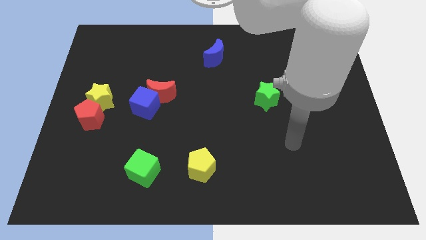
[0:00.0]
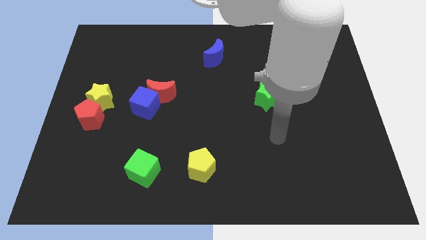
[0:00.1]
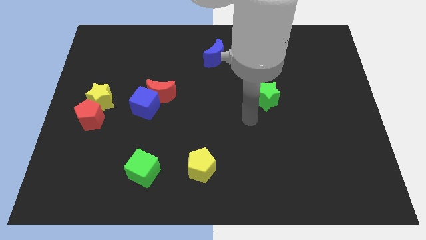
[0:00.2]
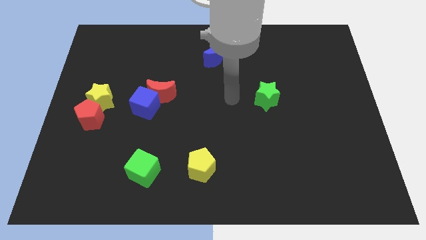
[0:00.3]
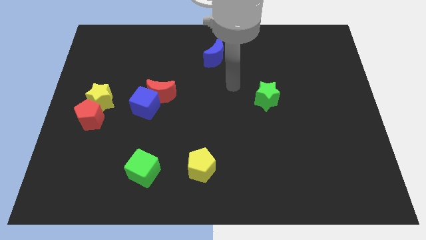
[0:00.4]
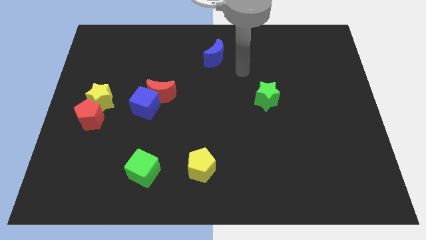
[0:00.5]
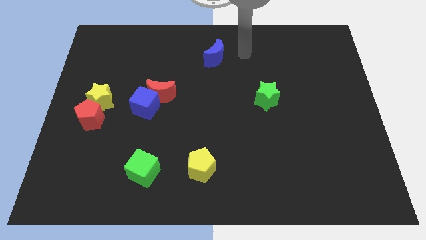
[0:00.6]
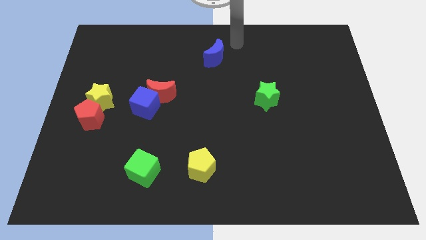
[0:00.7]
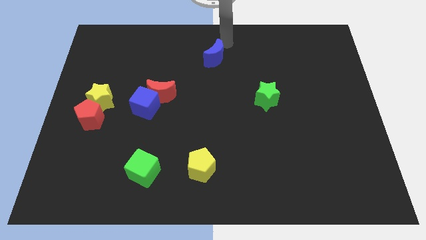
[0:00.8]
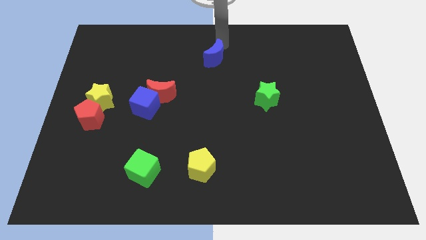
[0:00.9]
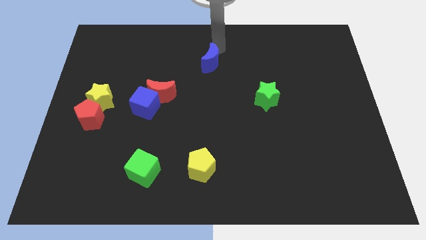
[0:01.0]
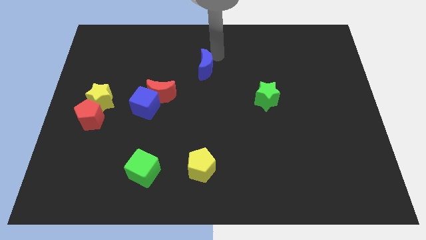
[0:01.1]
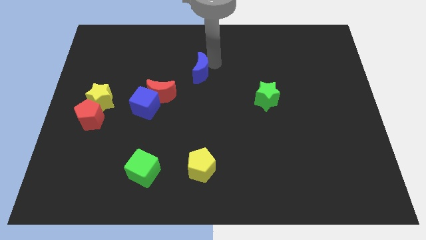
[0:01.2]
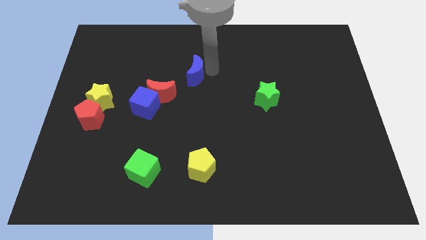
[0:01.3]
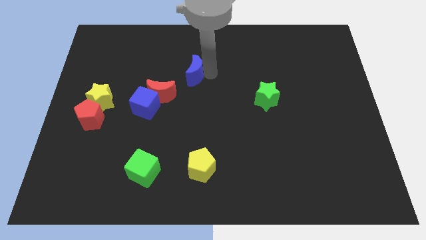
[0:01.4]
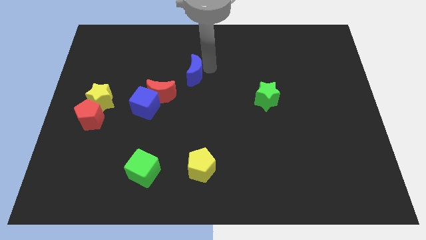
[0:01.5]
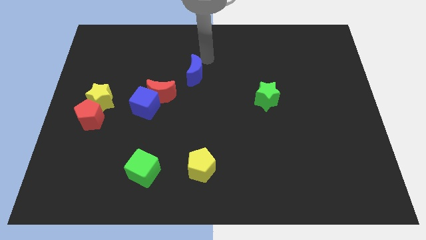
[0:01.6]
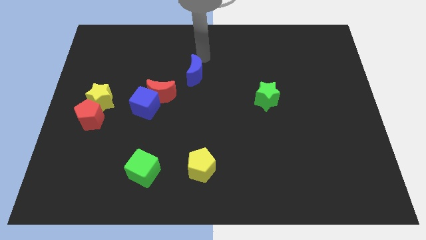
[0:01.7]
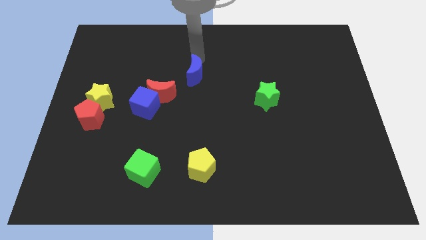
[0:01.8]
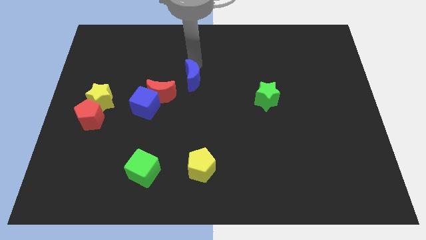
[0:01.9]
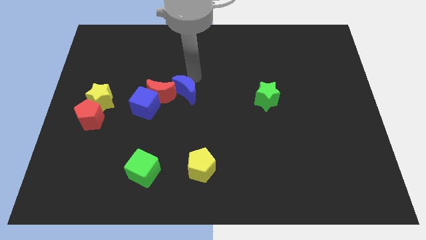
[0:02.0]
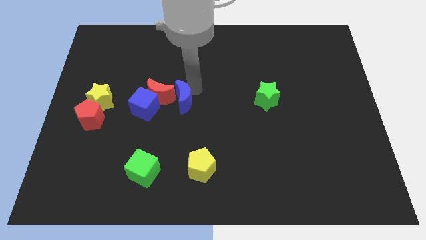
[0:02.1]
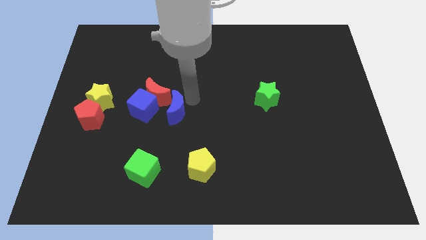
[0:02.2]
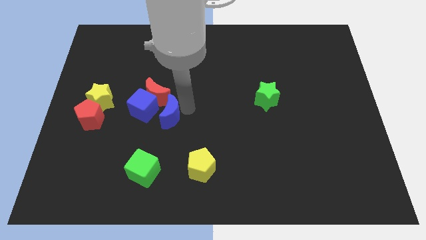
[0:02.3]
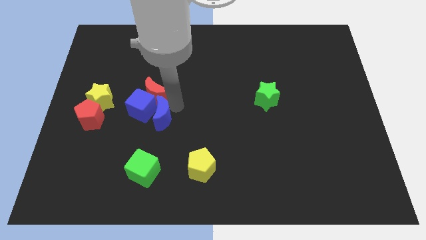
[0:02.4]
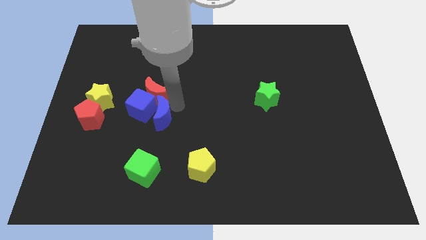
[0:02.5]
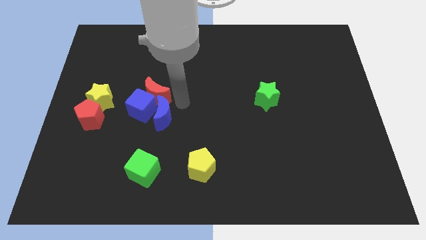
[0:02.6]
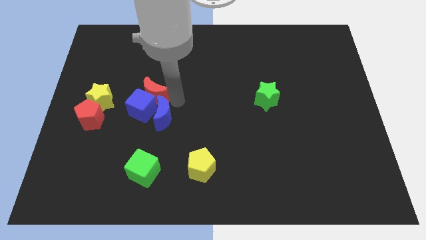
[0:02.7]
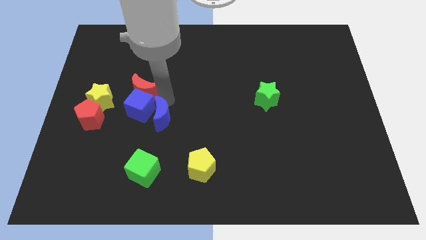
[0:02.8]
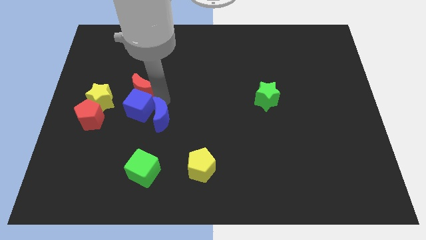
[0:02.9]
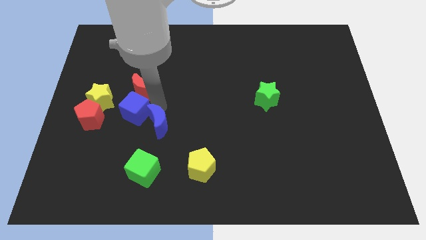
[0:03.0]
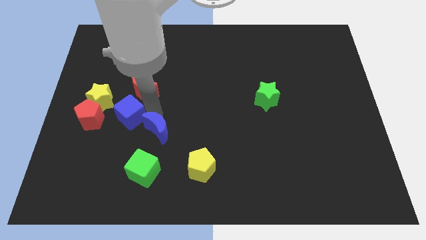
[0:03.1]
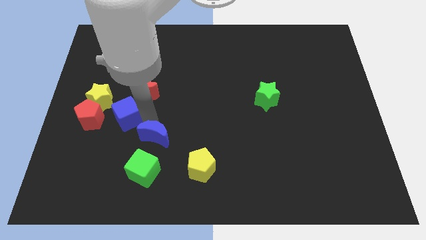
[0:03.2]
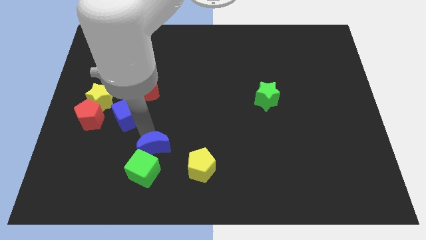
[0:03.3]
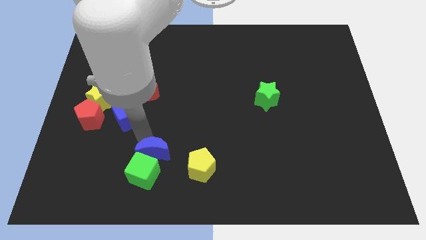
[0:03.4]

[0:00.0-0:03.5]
push the blue moon to the green cube

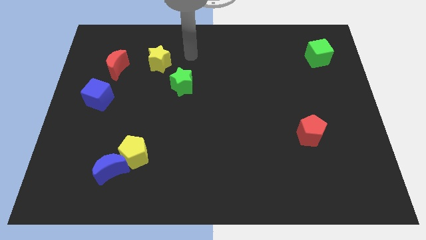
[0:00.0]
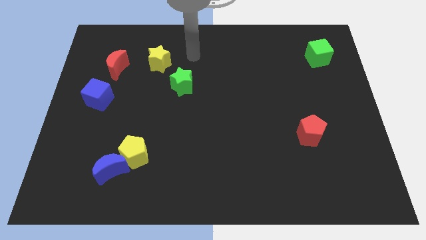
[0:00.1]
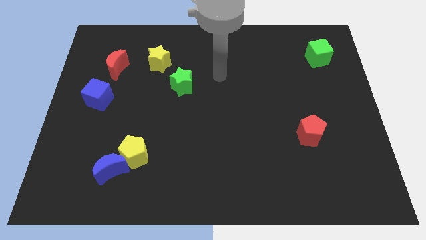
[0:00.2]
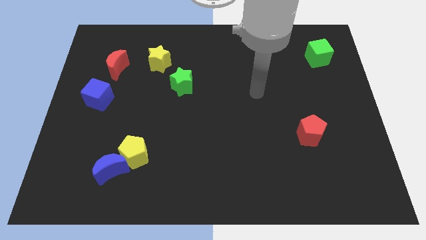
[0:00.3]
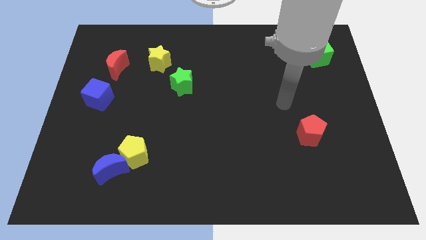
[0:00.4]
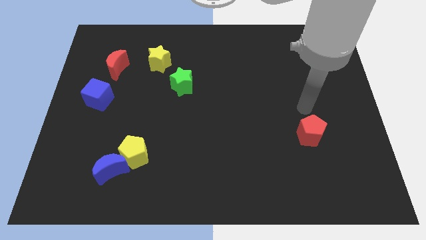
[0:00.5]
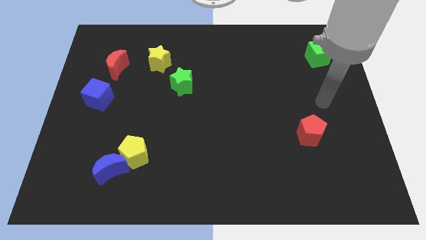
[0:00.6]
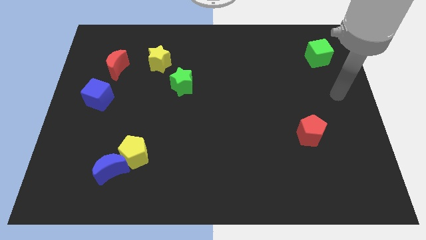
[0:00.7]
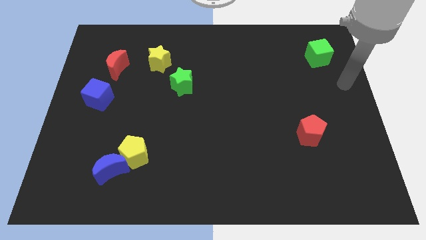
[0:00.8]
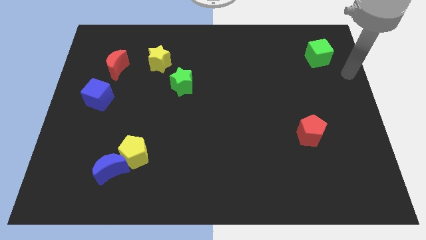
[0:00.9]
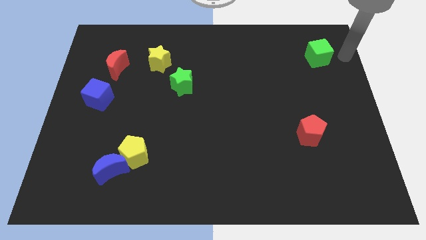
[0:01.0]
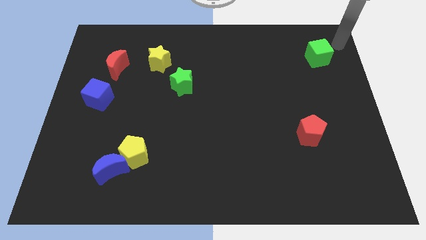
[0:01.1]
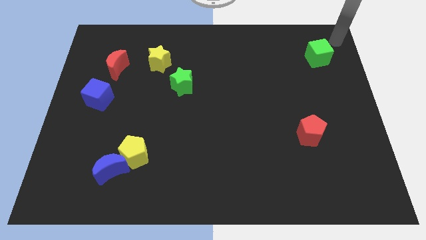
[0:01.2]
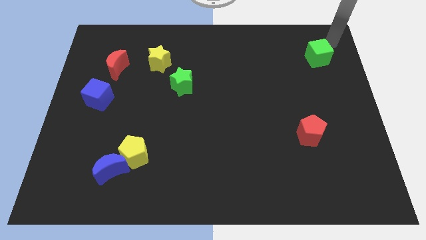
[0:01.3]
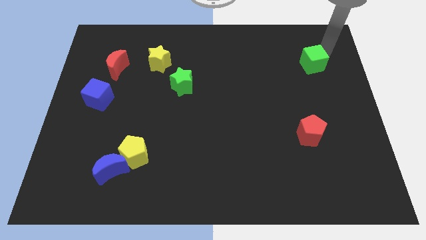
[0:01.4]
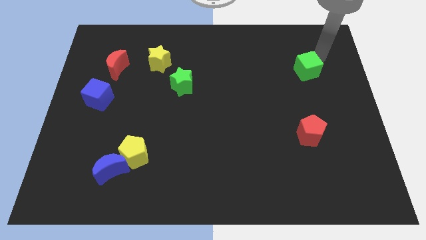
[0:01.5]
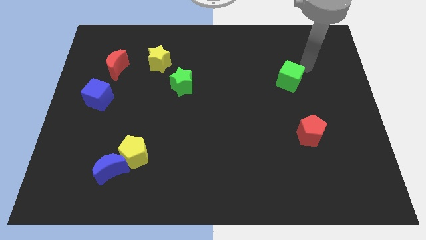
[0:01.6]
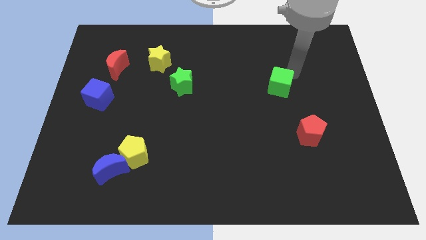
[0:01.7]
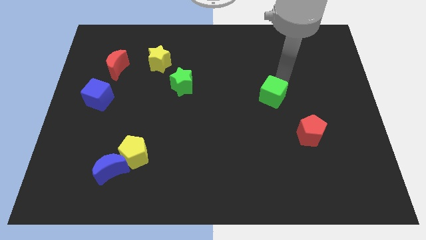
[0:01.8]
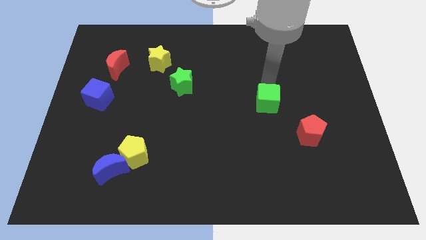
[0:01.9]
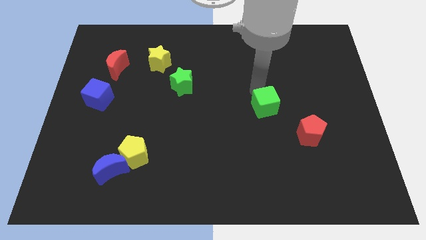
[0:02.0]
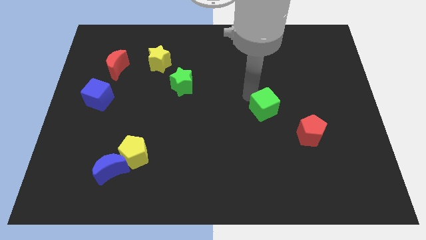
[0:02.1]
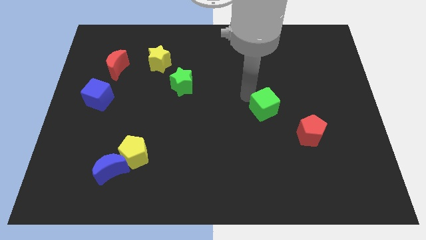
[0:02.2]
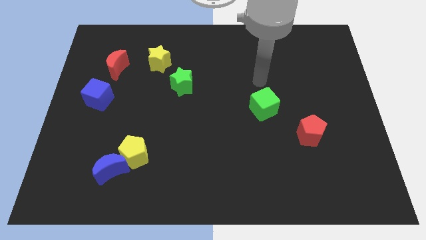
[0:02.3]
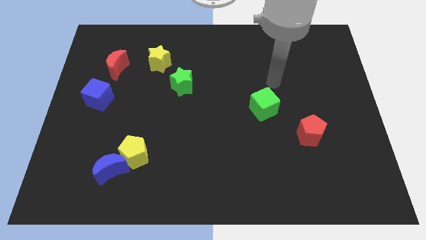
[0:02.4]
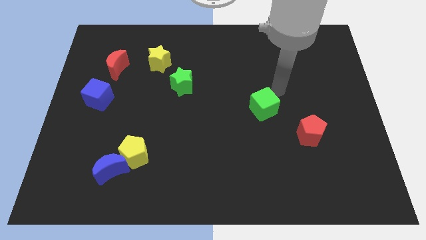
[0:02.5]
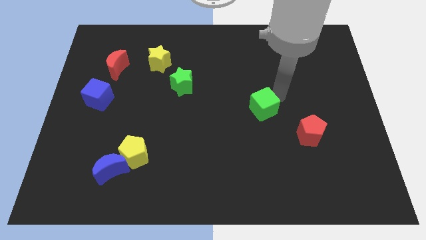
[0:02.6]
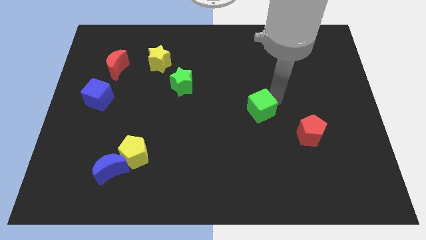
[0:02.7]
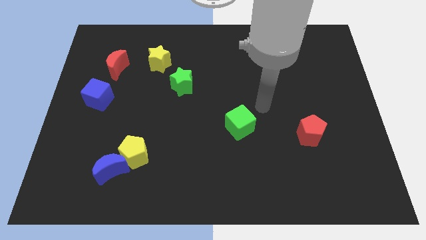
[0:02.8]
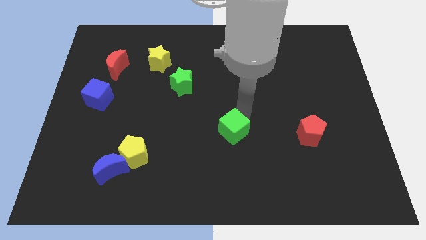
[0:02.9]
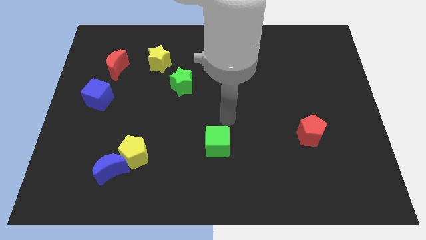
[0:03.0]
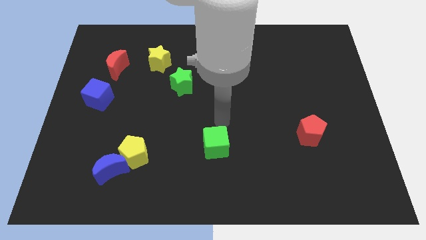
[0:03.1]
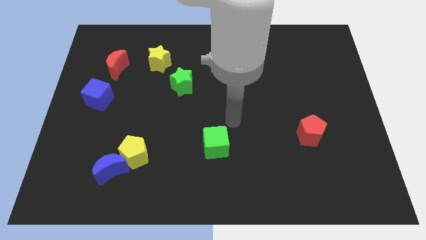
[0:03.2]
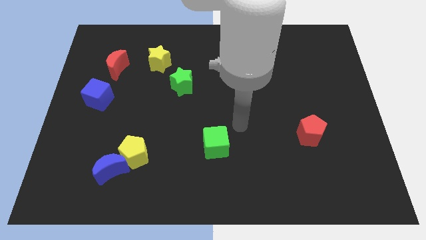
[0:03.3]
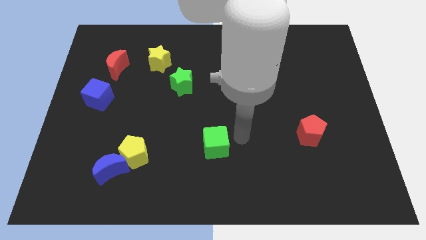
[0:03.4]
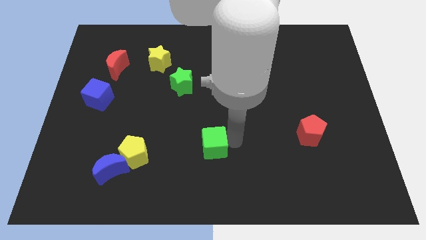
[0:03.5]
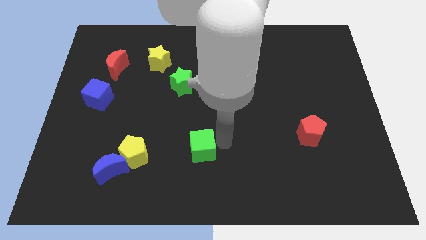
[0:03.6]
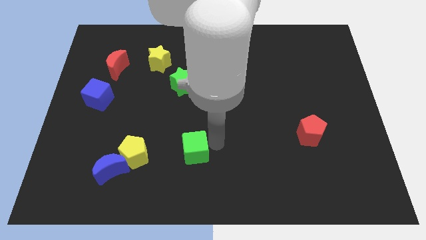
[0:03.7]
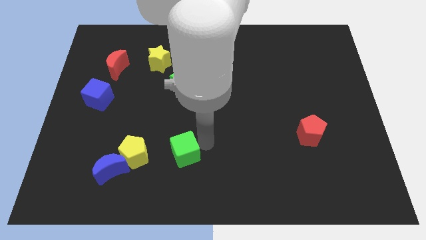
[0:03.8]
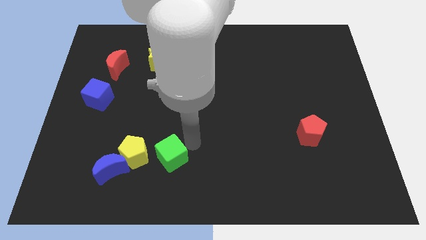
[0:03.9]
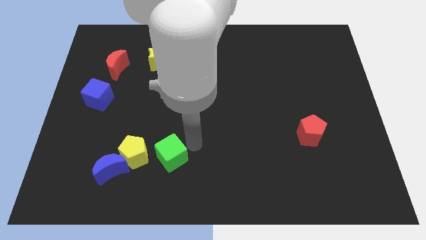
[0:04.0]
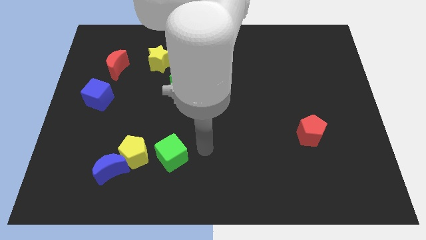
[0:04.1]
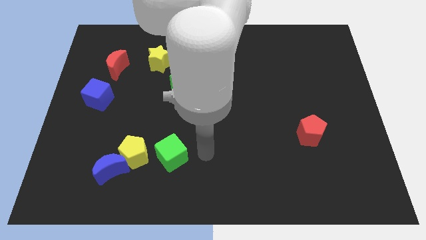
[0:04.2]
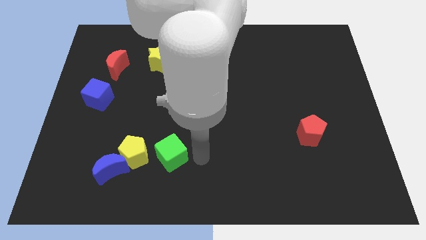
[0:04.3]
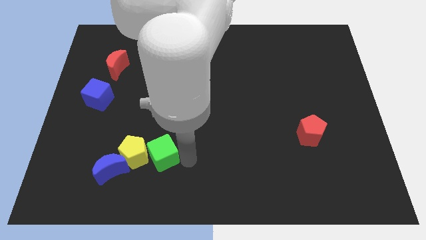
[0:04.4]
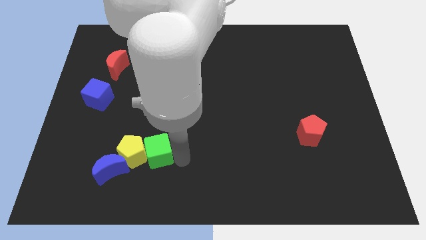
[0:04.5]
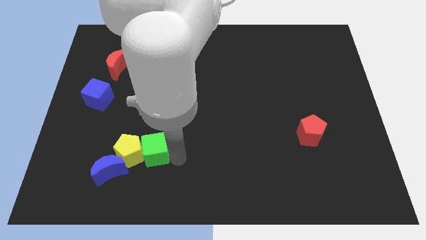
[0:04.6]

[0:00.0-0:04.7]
slide the green cube towards the yellow pentagon

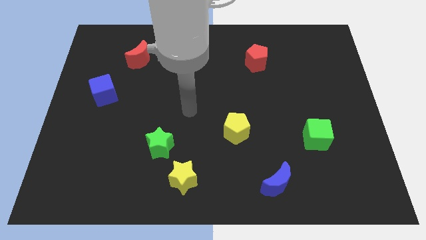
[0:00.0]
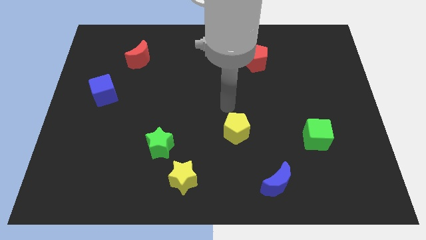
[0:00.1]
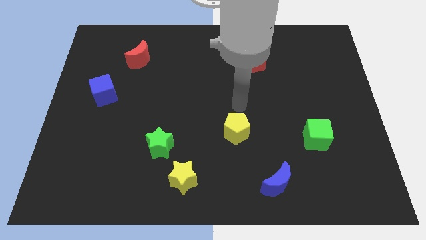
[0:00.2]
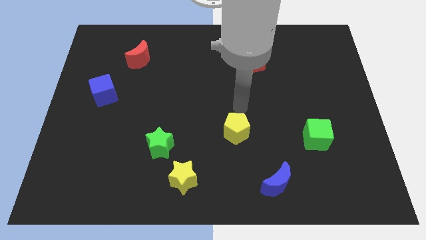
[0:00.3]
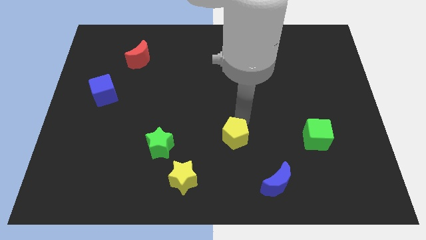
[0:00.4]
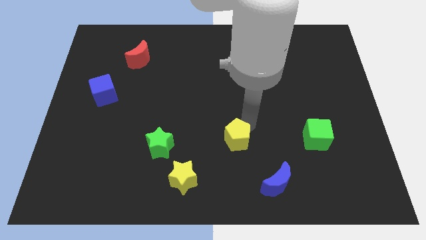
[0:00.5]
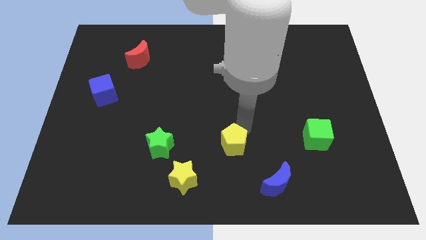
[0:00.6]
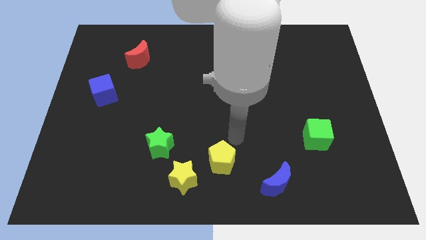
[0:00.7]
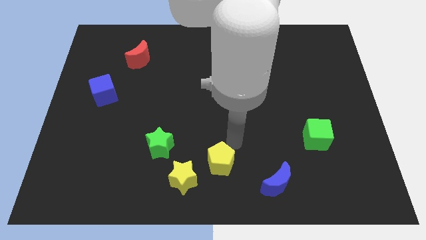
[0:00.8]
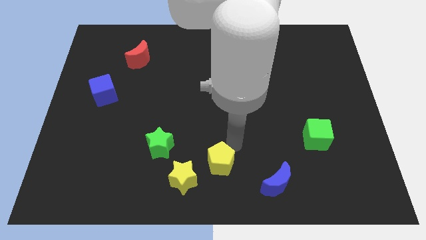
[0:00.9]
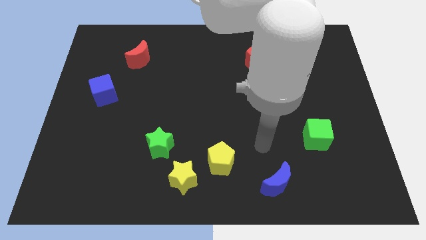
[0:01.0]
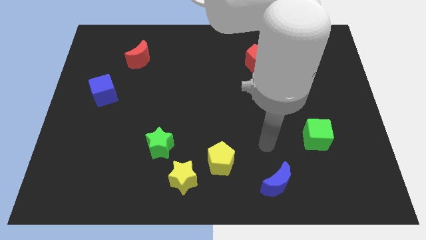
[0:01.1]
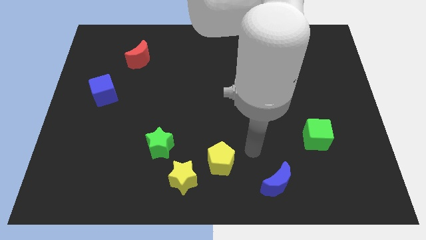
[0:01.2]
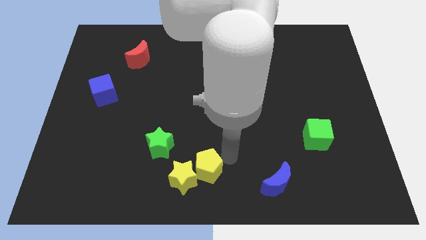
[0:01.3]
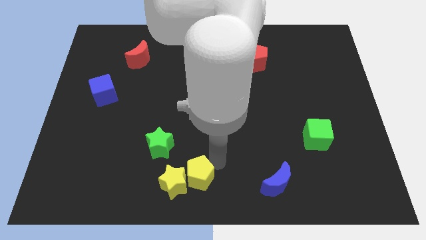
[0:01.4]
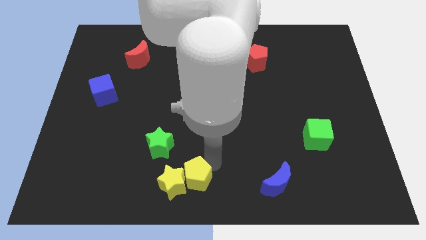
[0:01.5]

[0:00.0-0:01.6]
move the yellow pentagon close to the yellow star
